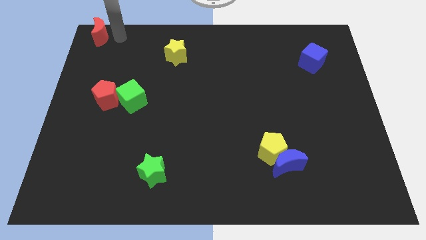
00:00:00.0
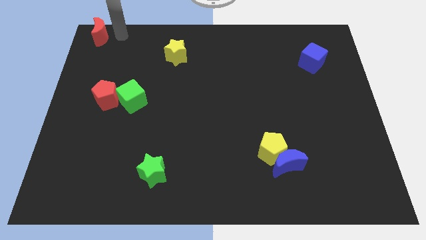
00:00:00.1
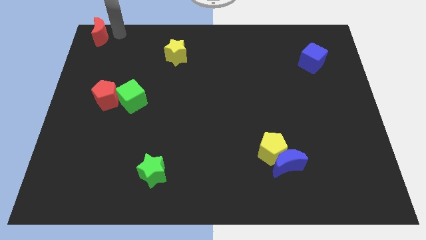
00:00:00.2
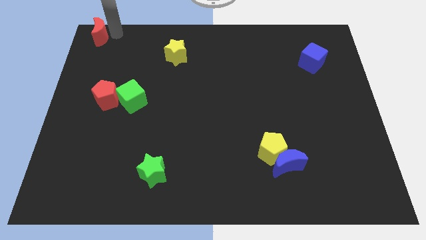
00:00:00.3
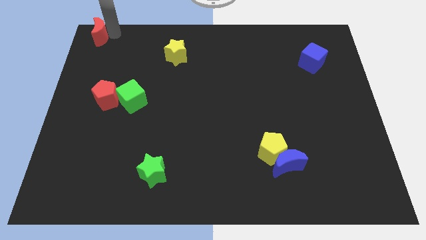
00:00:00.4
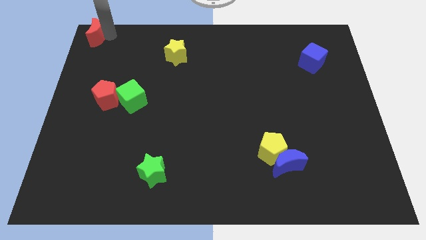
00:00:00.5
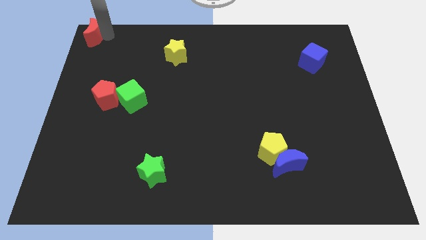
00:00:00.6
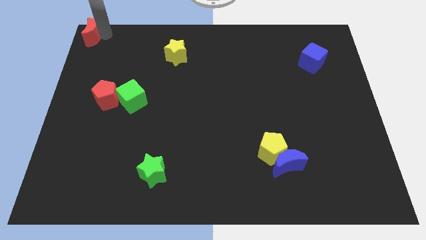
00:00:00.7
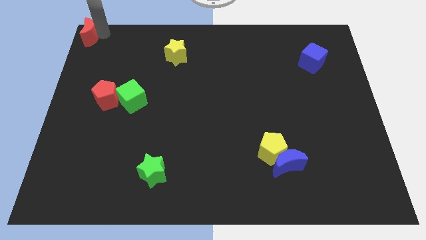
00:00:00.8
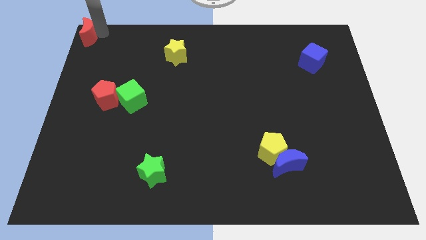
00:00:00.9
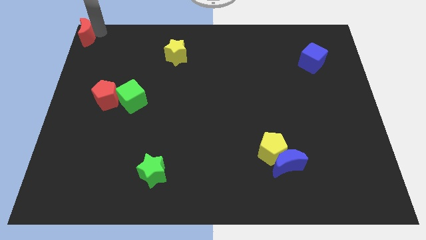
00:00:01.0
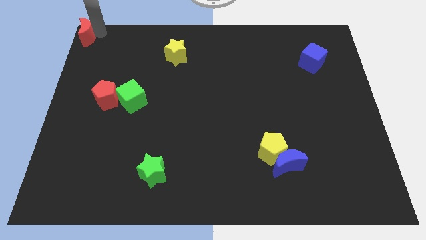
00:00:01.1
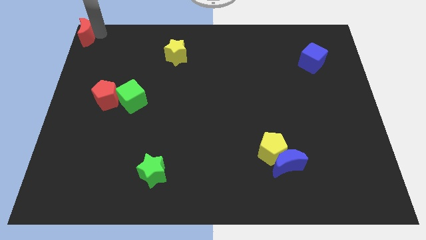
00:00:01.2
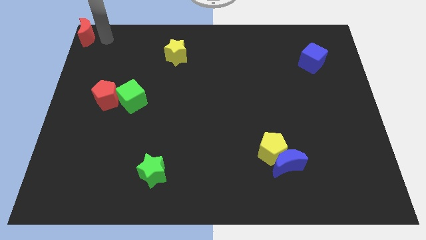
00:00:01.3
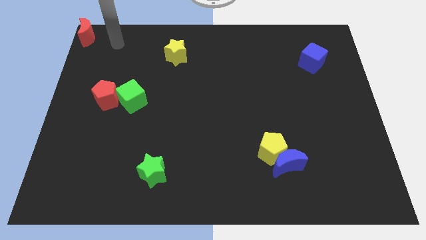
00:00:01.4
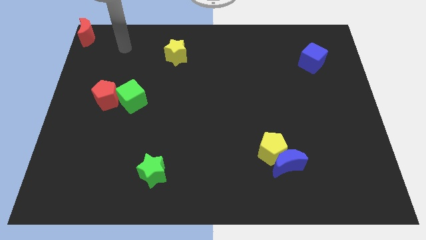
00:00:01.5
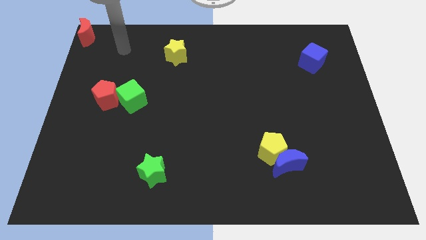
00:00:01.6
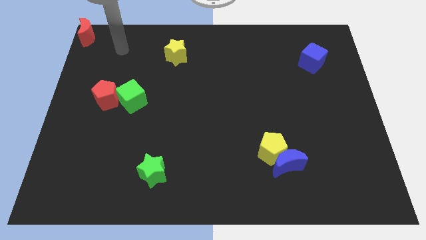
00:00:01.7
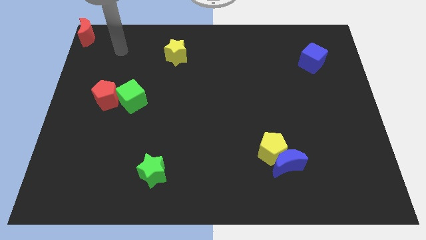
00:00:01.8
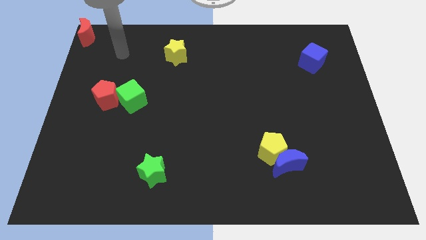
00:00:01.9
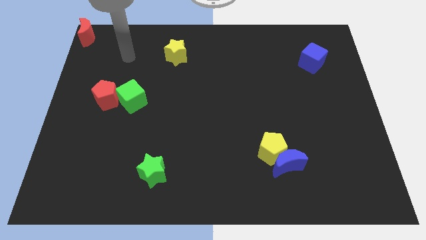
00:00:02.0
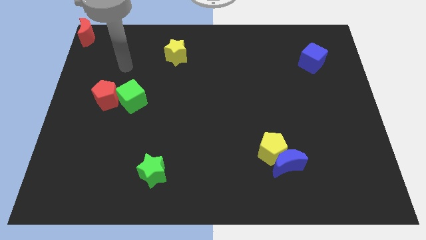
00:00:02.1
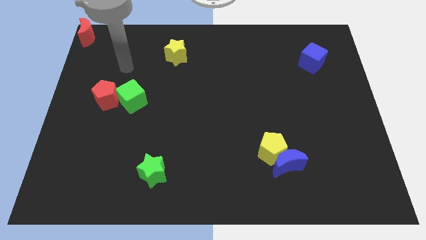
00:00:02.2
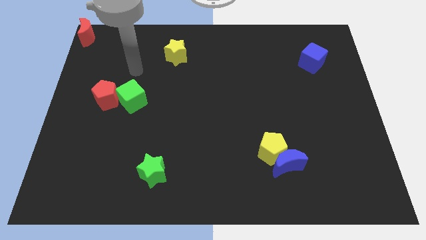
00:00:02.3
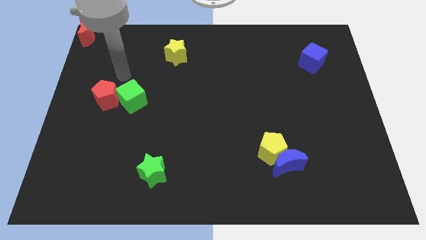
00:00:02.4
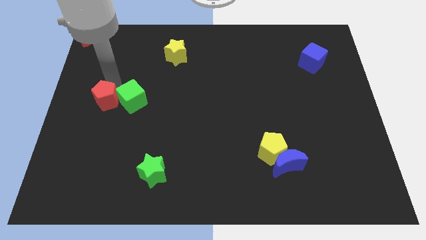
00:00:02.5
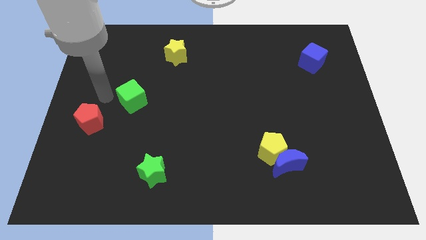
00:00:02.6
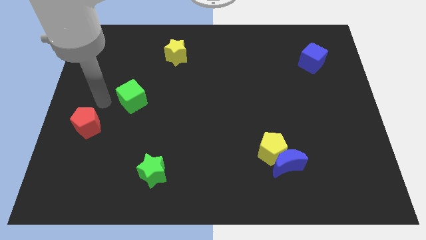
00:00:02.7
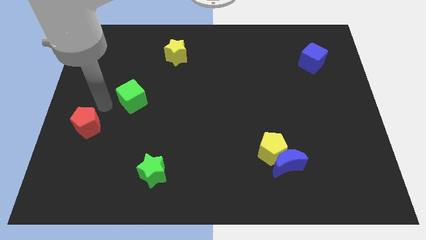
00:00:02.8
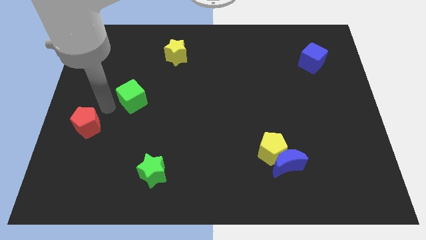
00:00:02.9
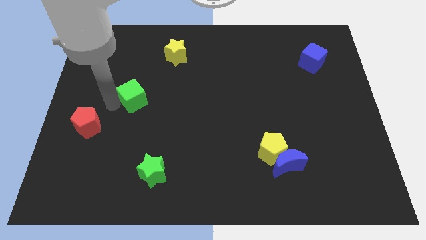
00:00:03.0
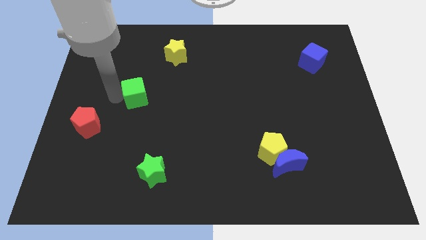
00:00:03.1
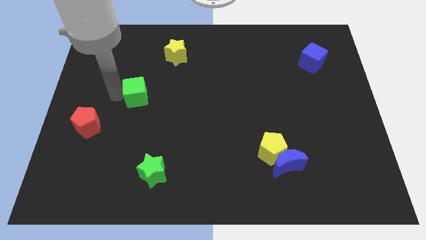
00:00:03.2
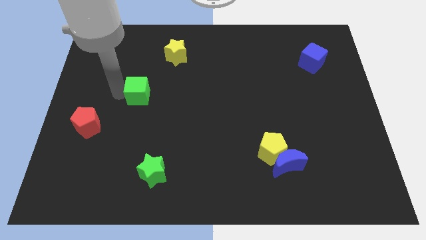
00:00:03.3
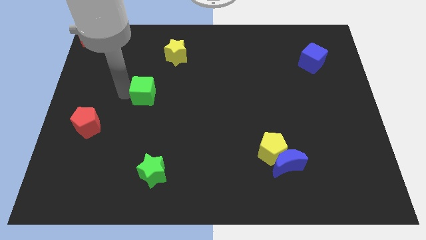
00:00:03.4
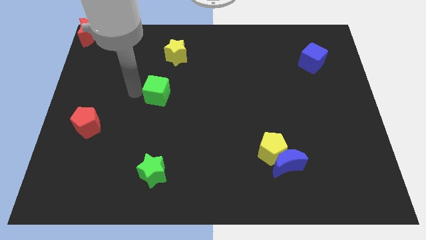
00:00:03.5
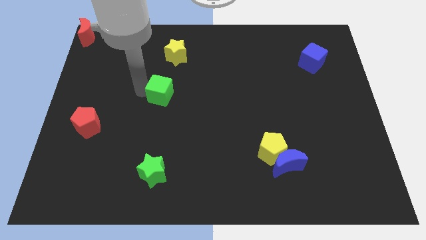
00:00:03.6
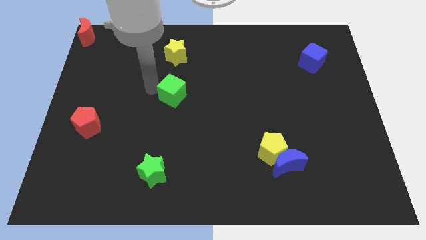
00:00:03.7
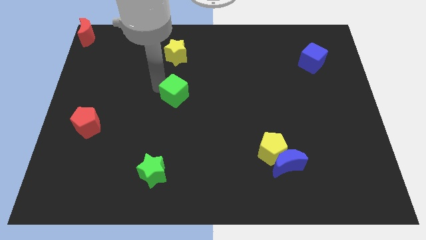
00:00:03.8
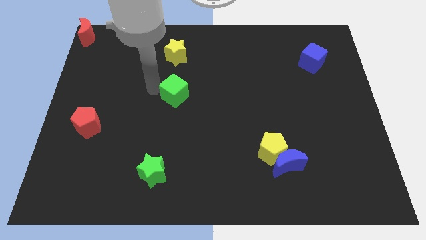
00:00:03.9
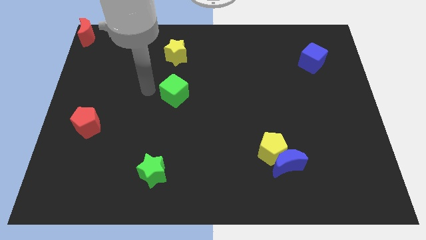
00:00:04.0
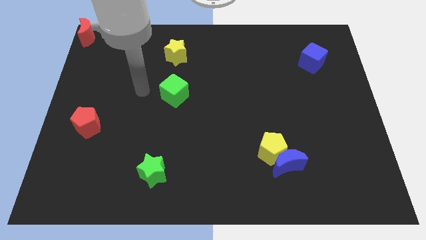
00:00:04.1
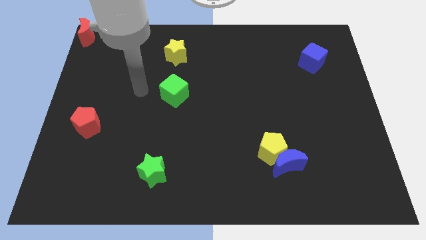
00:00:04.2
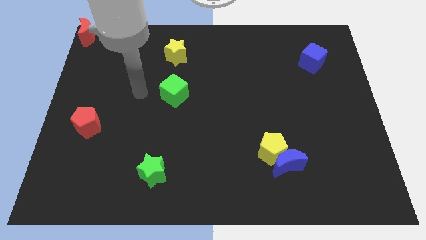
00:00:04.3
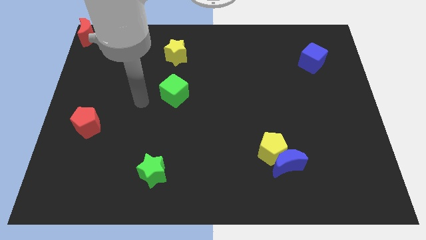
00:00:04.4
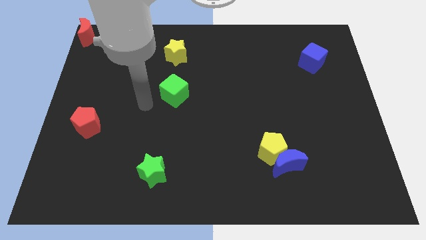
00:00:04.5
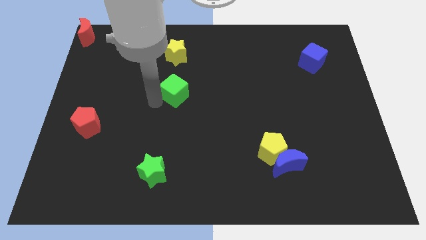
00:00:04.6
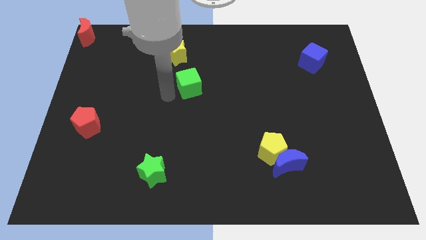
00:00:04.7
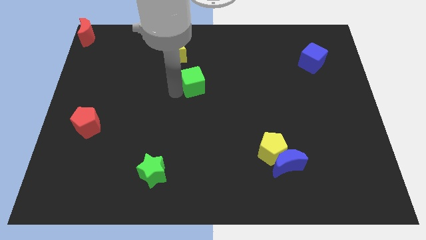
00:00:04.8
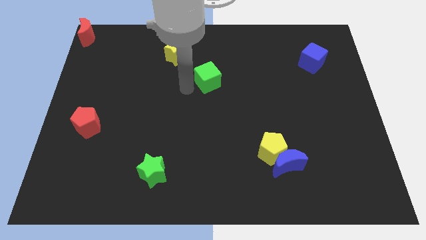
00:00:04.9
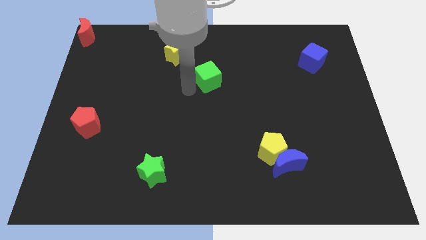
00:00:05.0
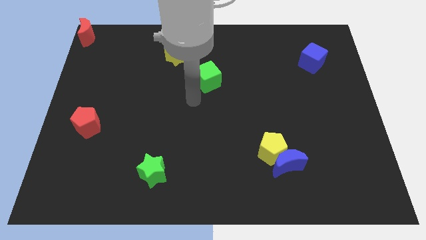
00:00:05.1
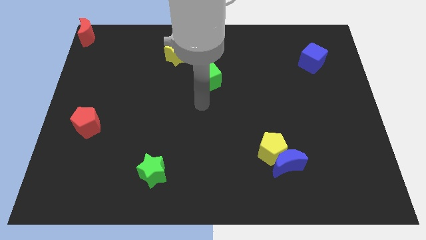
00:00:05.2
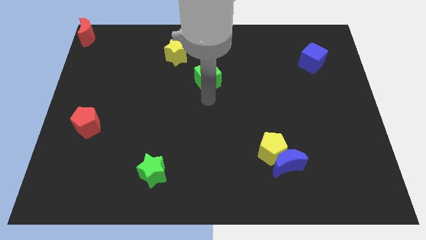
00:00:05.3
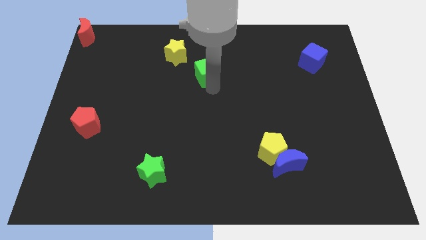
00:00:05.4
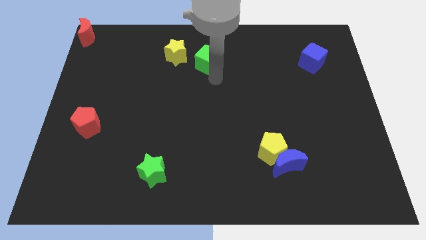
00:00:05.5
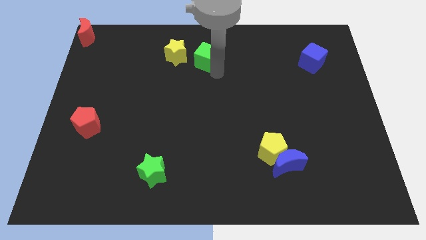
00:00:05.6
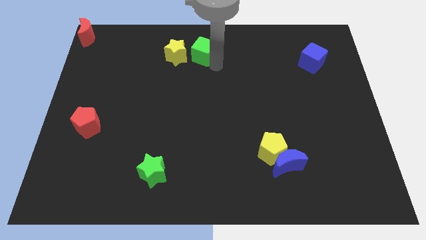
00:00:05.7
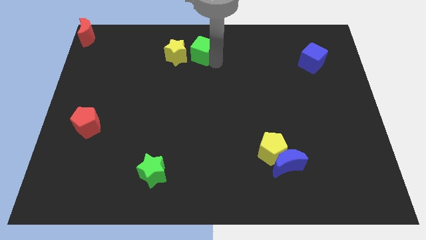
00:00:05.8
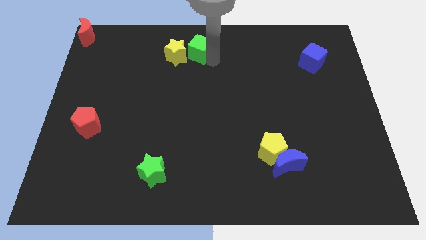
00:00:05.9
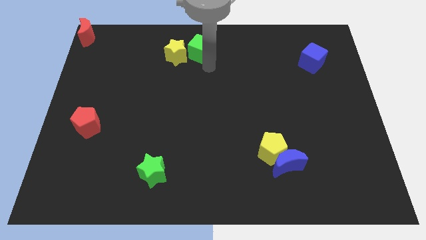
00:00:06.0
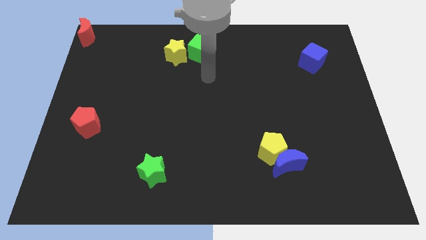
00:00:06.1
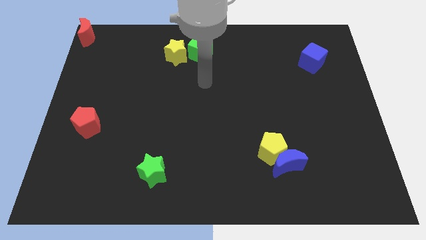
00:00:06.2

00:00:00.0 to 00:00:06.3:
move the green cube to right side of the green star

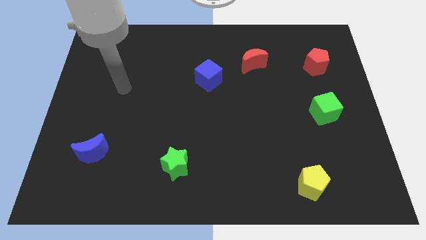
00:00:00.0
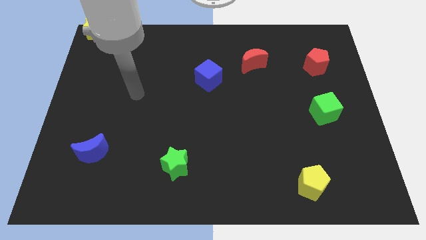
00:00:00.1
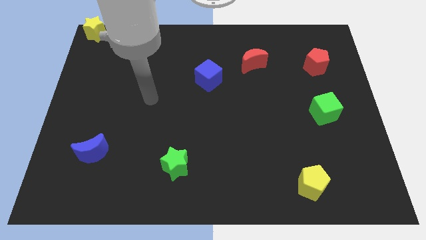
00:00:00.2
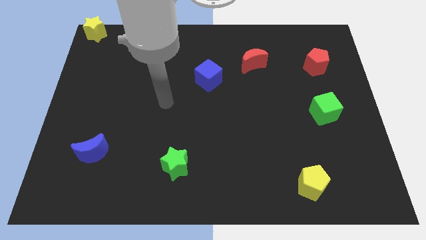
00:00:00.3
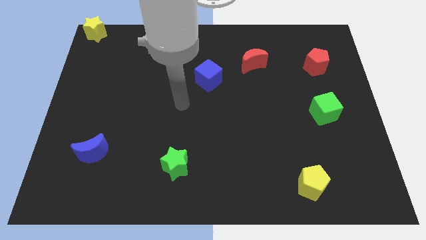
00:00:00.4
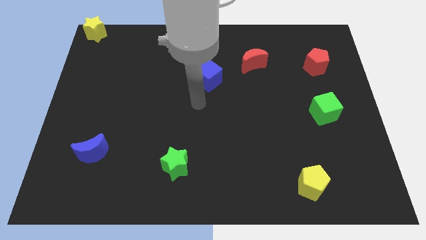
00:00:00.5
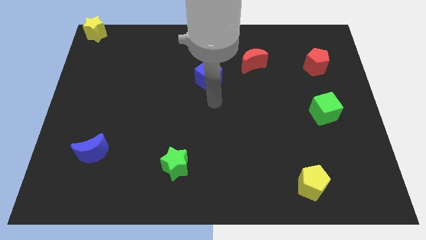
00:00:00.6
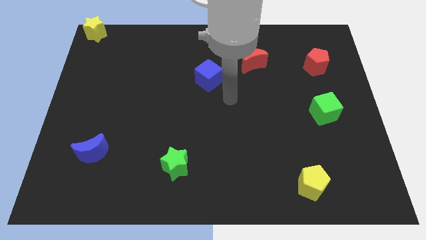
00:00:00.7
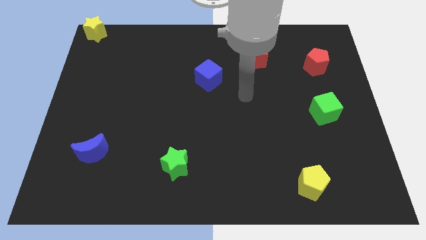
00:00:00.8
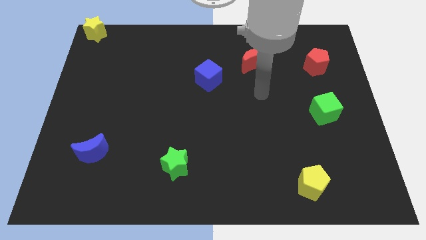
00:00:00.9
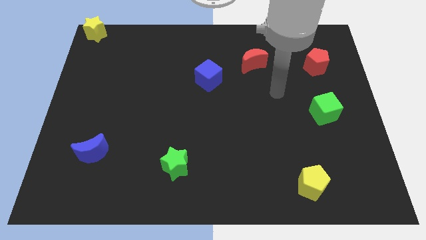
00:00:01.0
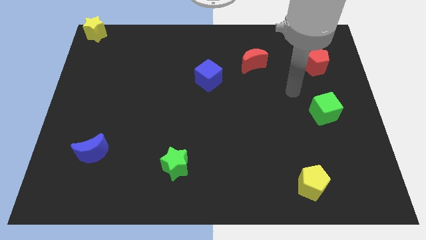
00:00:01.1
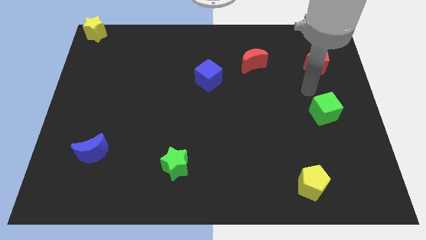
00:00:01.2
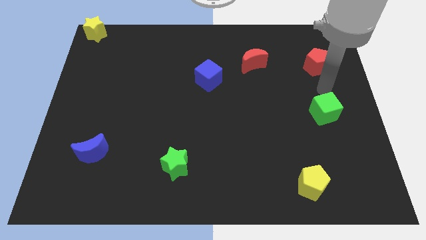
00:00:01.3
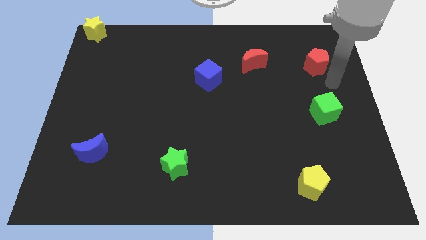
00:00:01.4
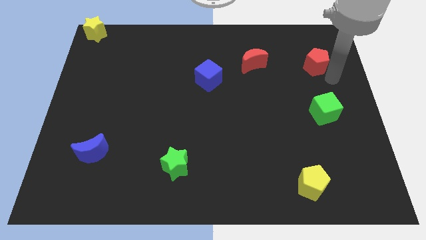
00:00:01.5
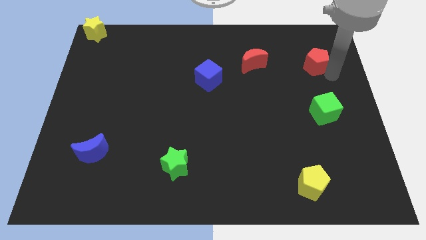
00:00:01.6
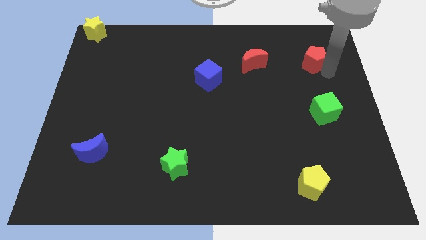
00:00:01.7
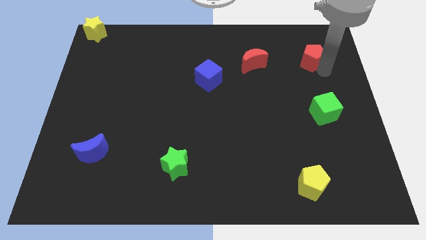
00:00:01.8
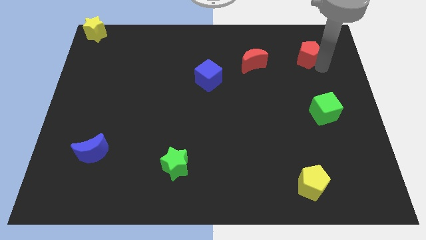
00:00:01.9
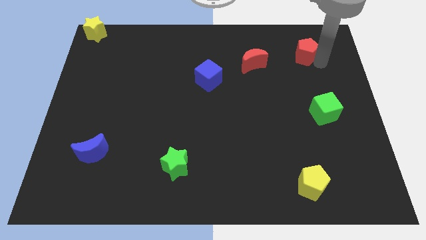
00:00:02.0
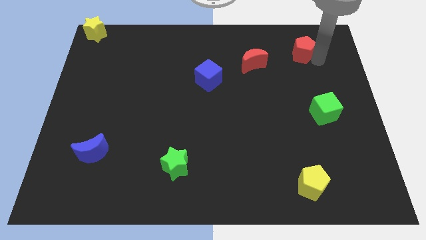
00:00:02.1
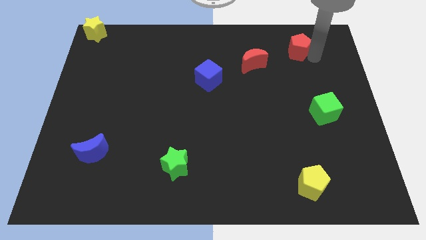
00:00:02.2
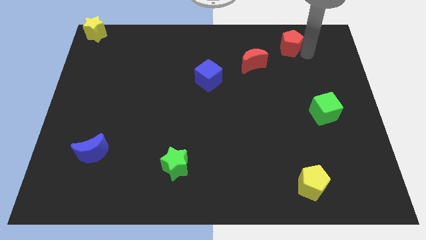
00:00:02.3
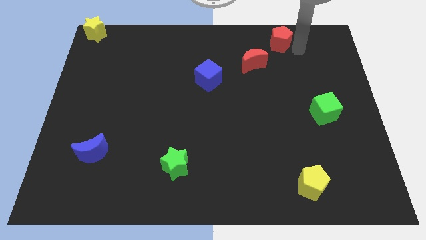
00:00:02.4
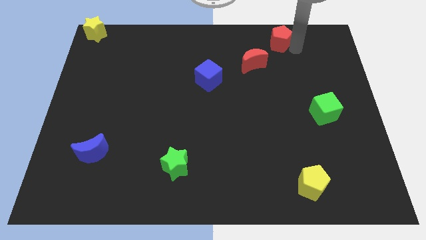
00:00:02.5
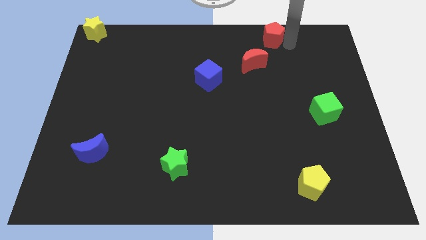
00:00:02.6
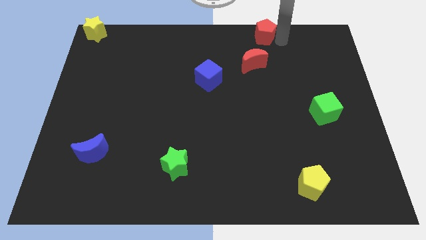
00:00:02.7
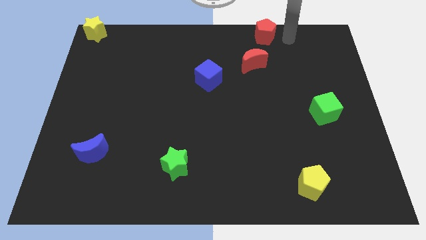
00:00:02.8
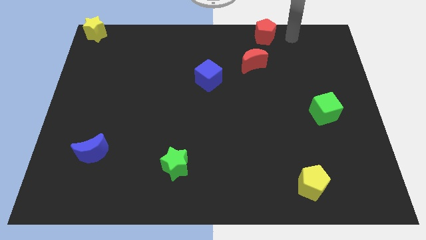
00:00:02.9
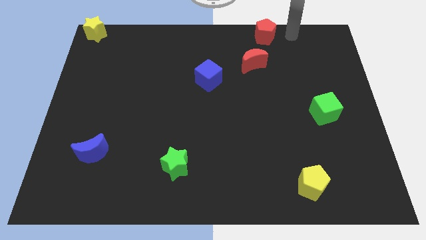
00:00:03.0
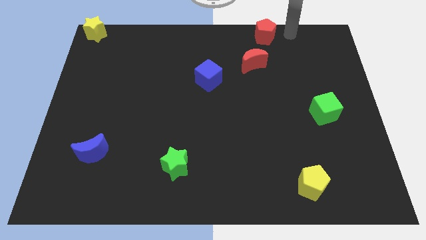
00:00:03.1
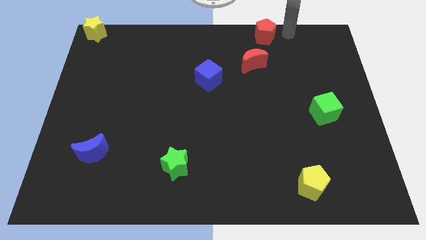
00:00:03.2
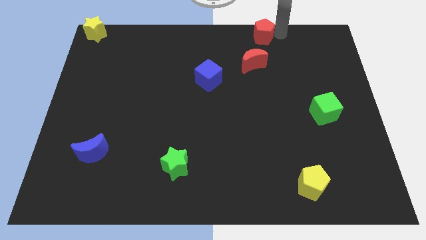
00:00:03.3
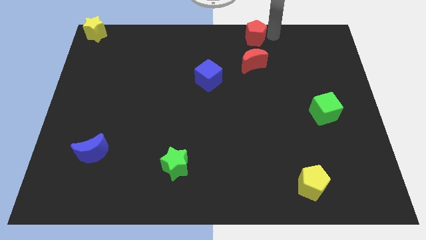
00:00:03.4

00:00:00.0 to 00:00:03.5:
place the red pentagon to the top side of the red crescent
